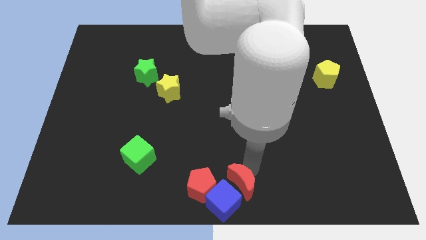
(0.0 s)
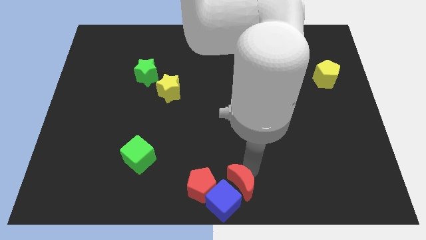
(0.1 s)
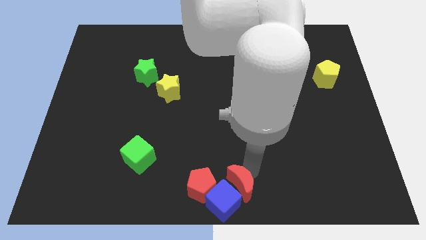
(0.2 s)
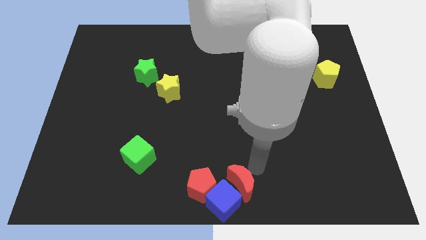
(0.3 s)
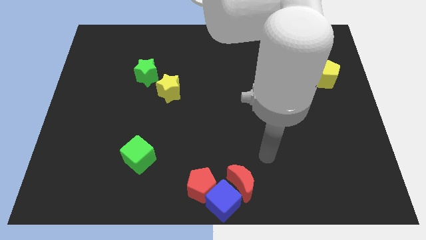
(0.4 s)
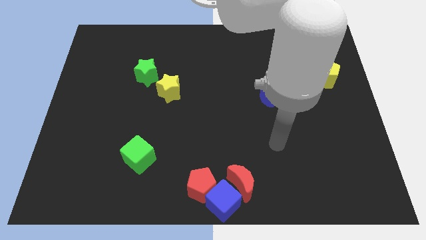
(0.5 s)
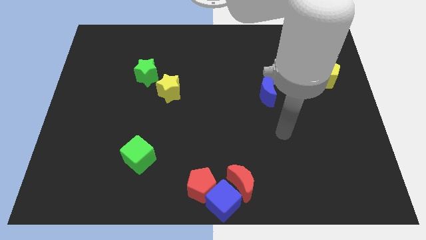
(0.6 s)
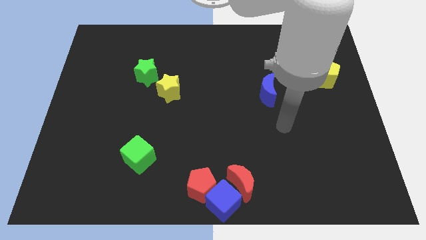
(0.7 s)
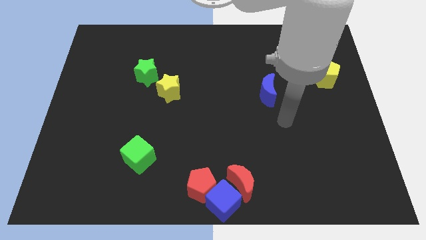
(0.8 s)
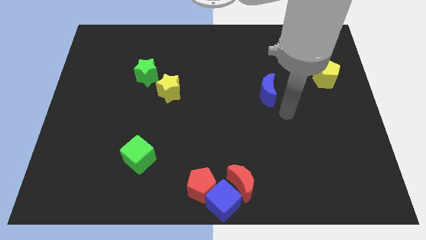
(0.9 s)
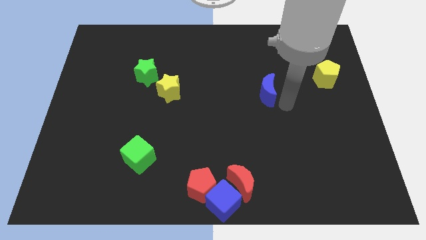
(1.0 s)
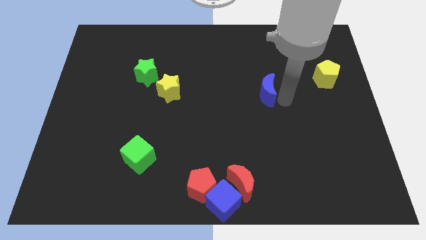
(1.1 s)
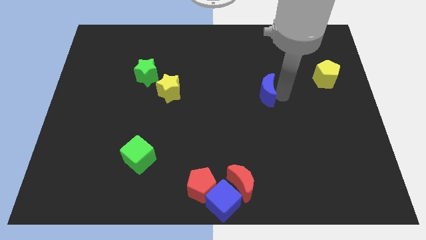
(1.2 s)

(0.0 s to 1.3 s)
move the arm away from the red moon

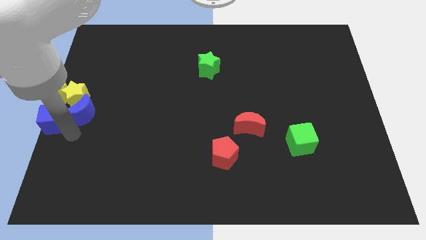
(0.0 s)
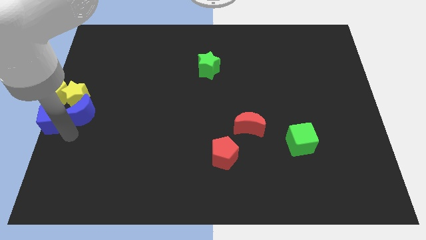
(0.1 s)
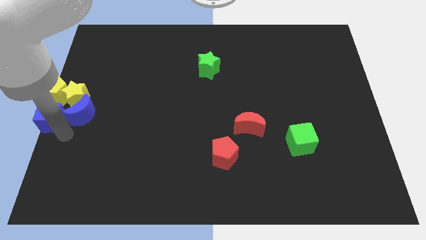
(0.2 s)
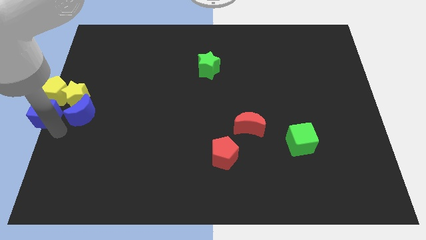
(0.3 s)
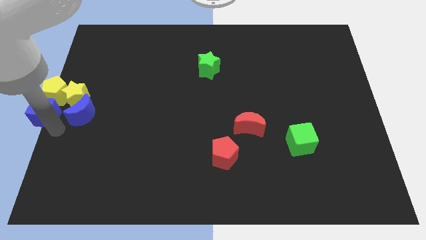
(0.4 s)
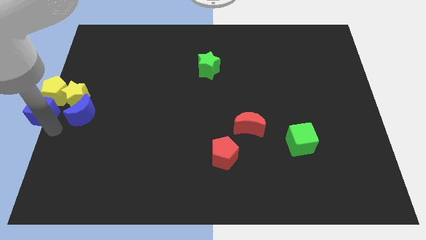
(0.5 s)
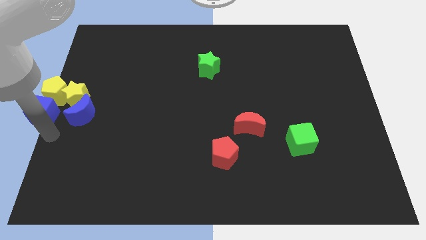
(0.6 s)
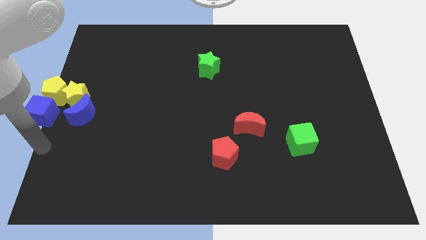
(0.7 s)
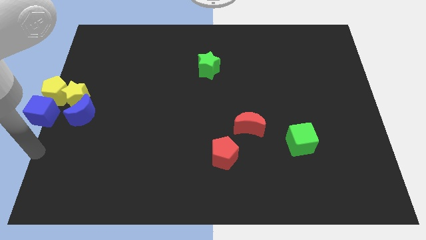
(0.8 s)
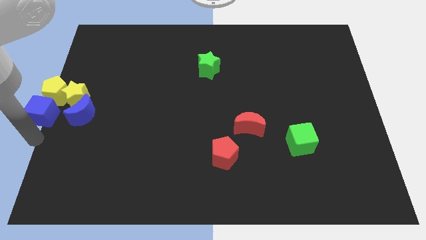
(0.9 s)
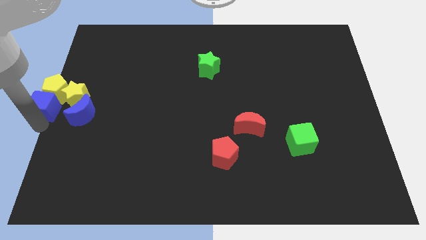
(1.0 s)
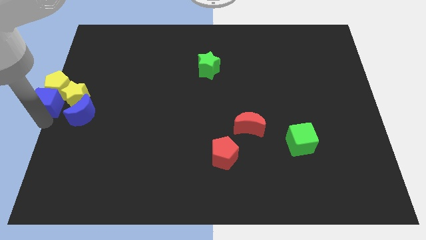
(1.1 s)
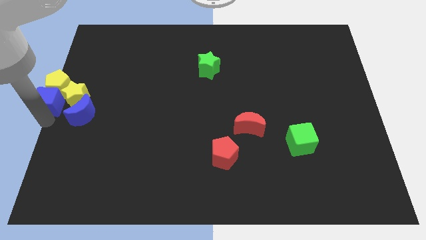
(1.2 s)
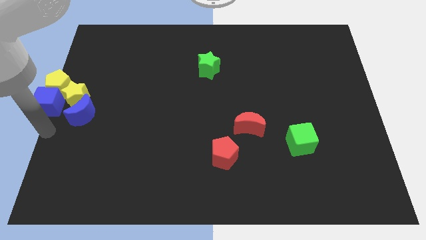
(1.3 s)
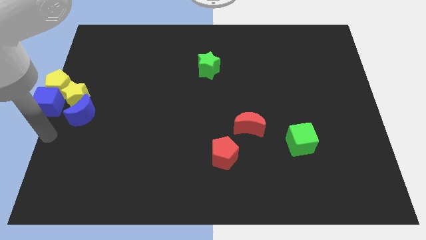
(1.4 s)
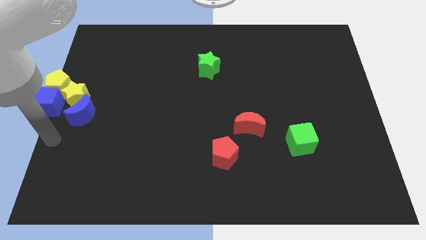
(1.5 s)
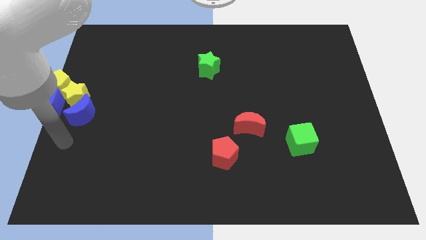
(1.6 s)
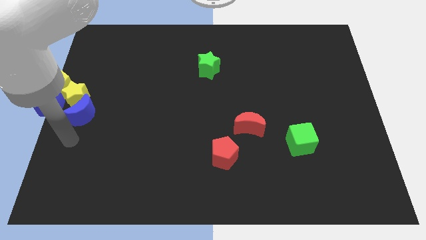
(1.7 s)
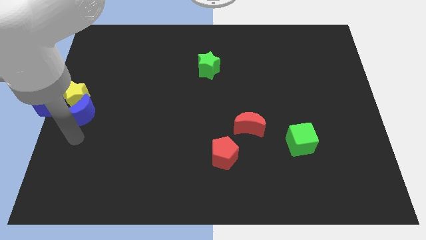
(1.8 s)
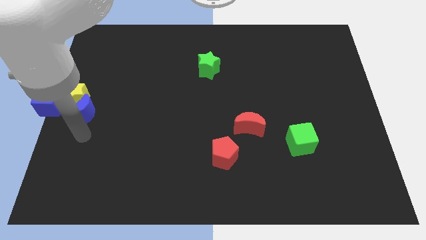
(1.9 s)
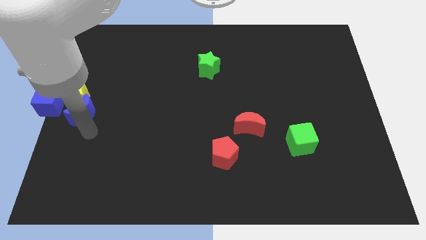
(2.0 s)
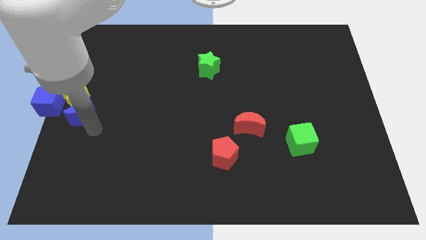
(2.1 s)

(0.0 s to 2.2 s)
push the blue cube into the yellow pentagon

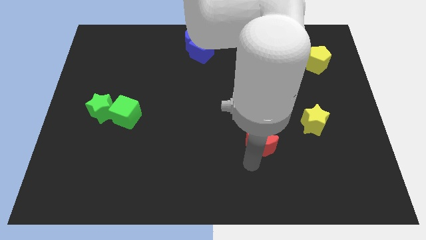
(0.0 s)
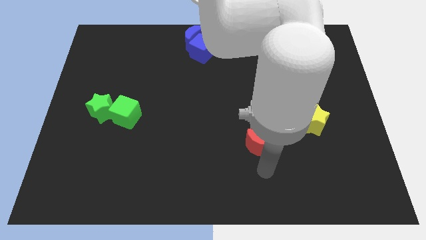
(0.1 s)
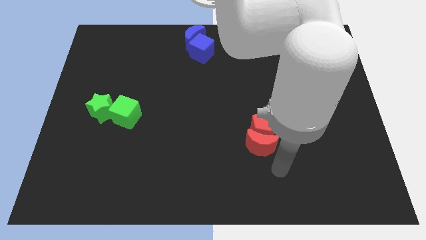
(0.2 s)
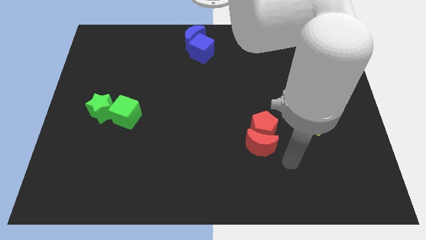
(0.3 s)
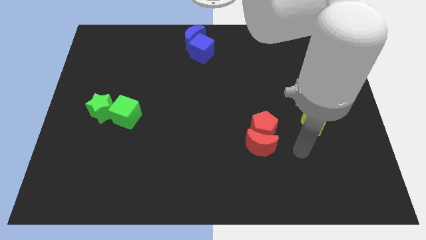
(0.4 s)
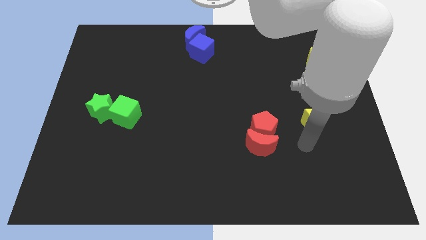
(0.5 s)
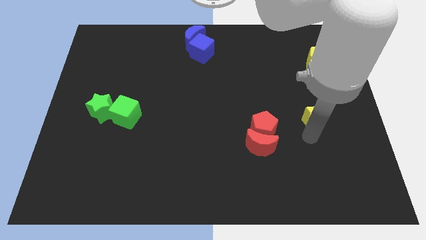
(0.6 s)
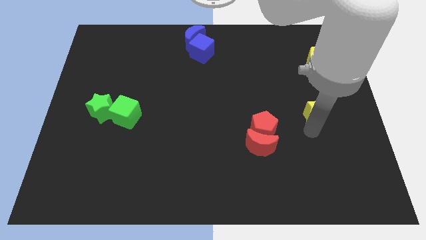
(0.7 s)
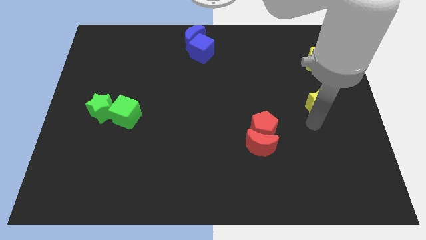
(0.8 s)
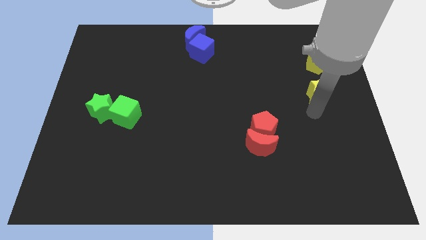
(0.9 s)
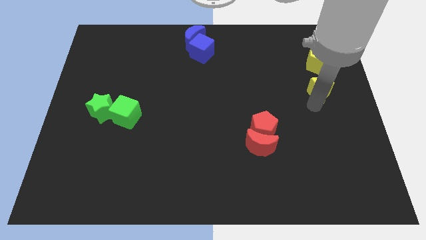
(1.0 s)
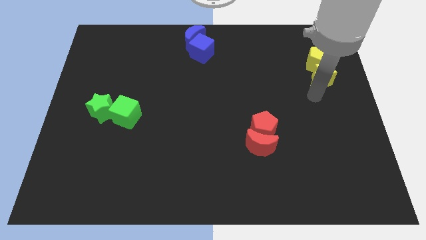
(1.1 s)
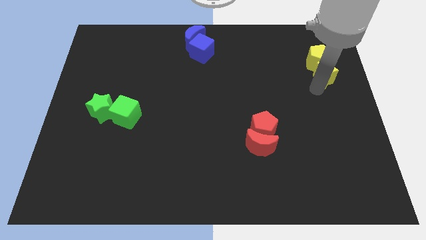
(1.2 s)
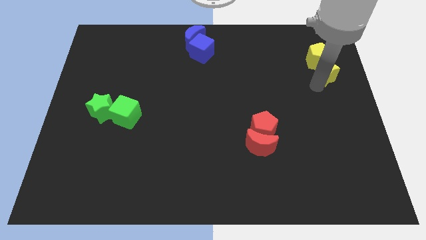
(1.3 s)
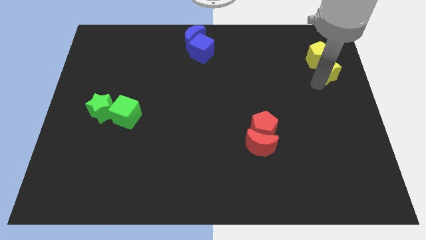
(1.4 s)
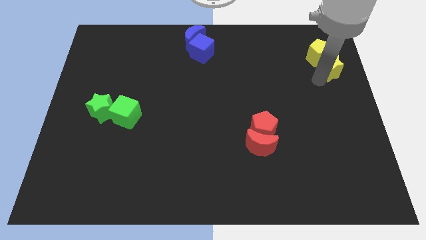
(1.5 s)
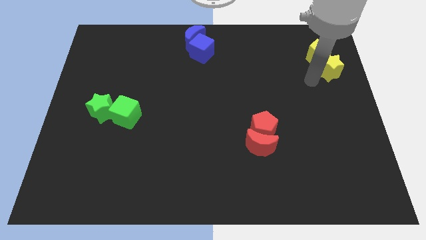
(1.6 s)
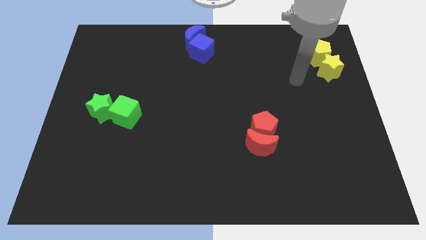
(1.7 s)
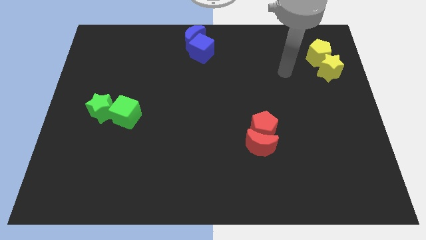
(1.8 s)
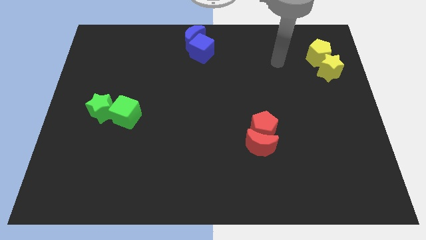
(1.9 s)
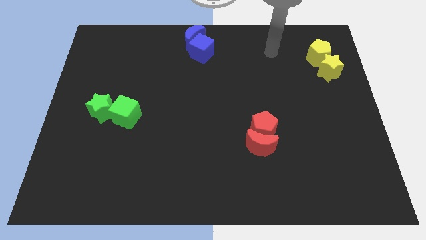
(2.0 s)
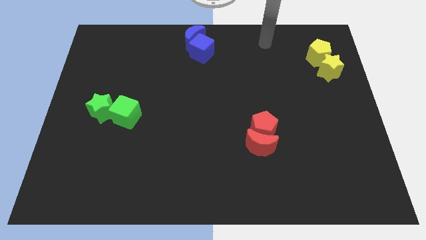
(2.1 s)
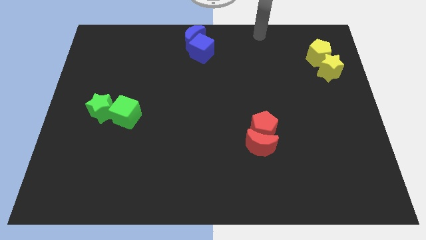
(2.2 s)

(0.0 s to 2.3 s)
push yellow pentagon with the help of yellow star

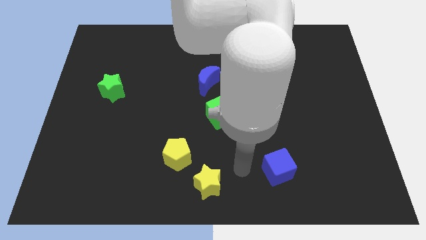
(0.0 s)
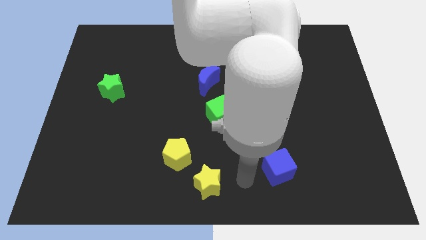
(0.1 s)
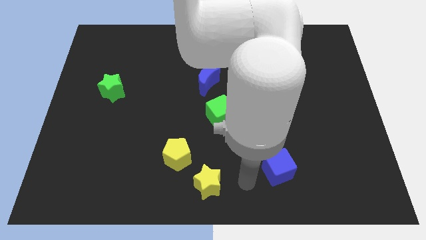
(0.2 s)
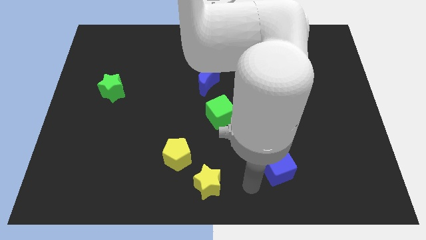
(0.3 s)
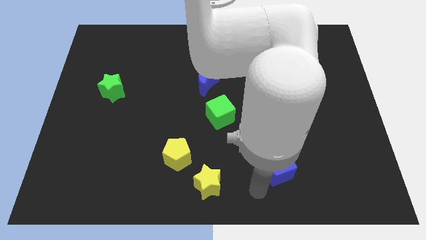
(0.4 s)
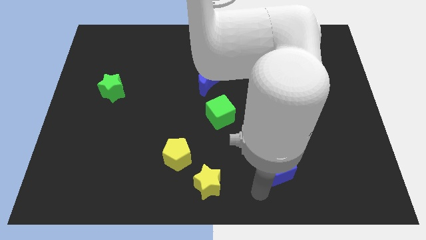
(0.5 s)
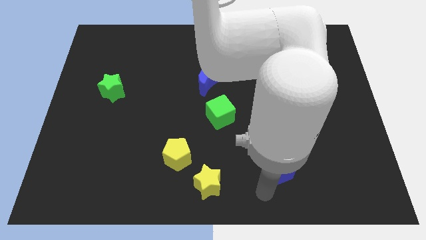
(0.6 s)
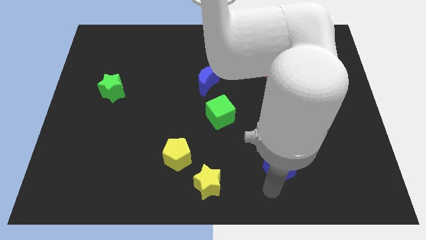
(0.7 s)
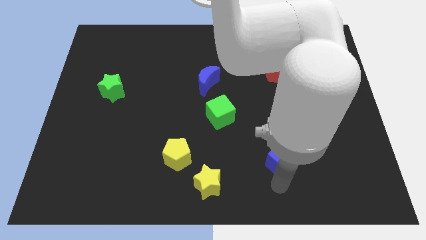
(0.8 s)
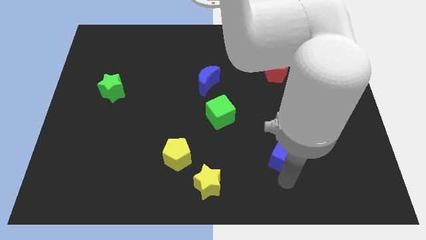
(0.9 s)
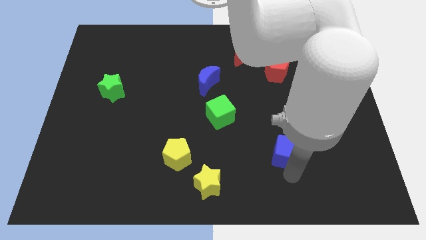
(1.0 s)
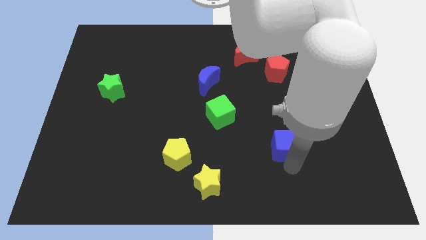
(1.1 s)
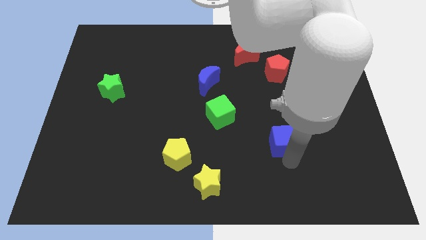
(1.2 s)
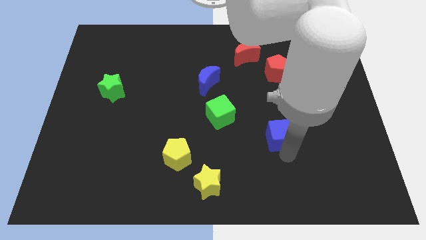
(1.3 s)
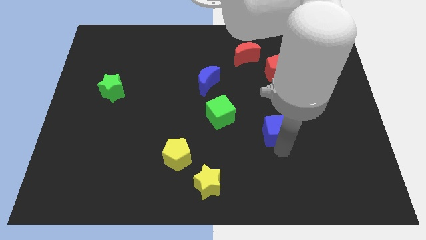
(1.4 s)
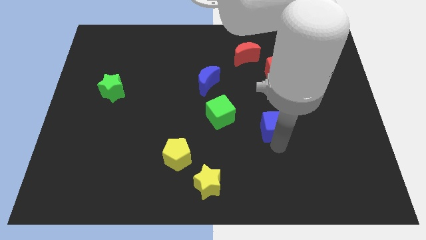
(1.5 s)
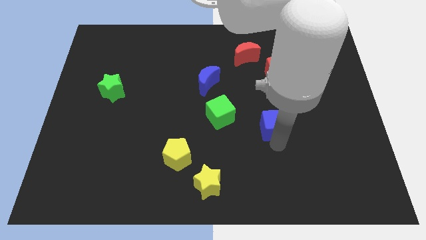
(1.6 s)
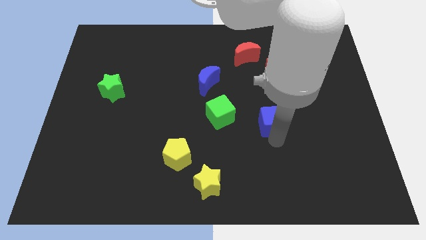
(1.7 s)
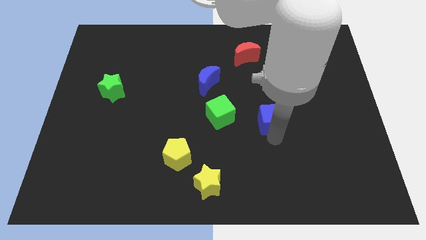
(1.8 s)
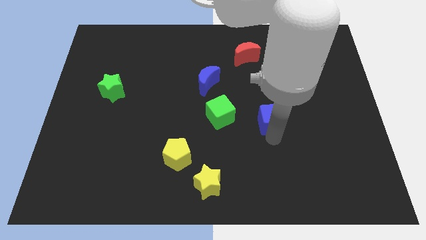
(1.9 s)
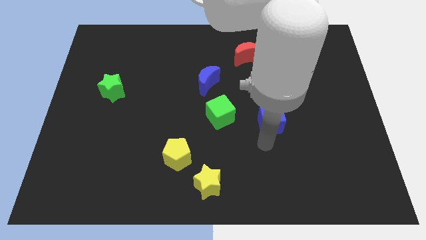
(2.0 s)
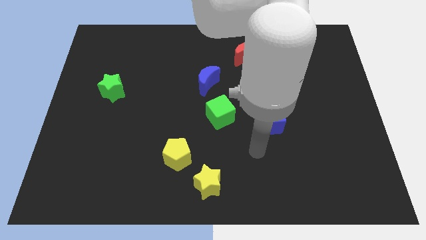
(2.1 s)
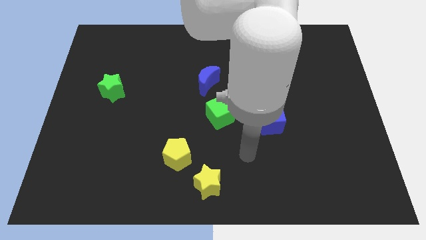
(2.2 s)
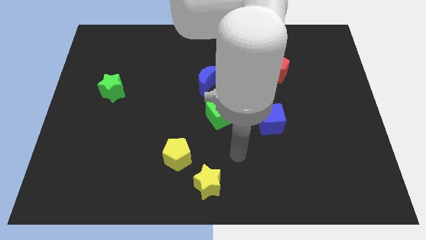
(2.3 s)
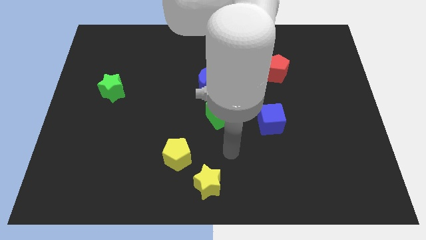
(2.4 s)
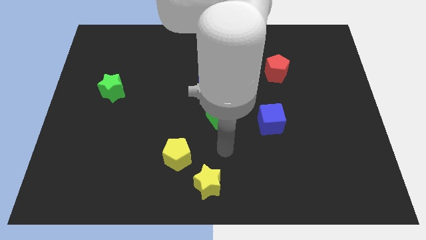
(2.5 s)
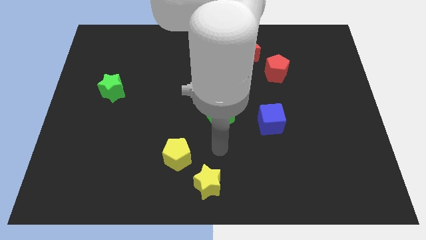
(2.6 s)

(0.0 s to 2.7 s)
move the blue cube towards the red pentagon

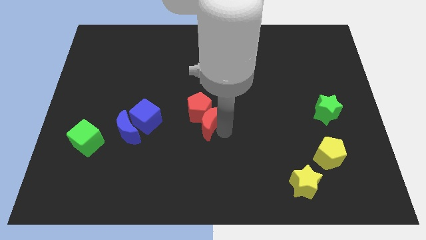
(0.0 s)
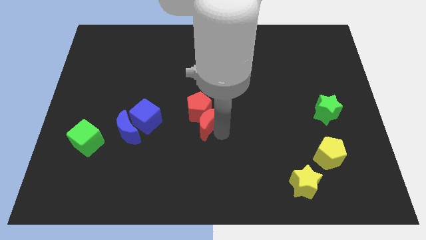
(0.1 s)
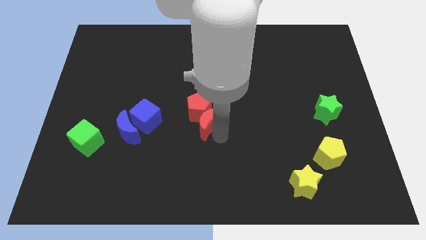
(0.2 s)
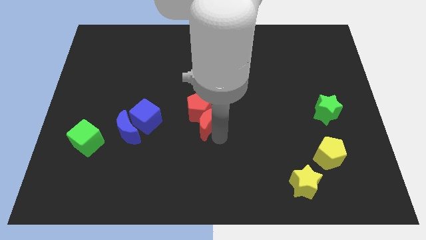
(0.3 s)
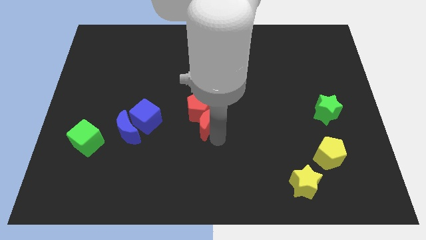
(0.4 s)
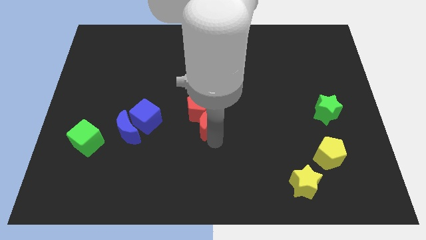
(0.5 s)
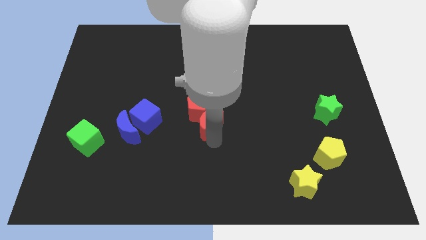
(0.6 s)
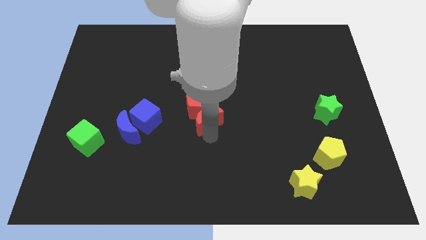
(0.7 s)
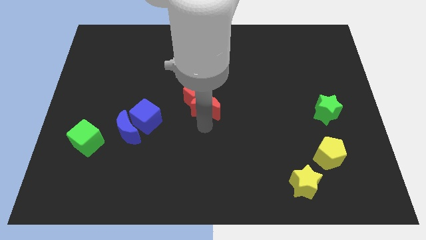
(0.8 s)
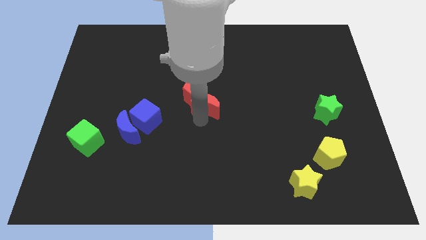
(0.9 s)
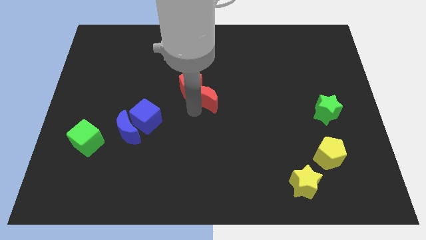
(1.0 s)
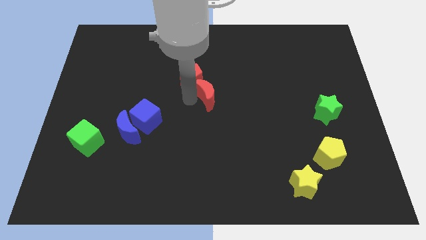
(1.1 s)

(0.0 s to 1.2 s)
place the red crescent below the red pentagon
